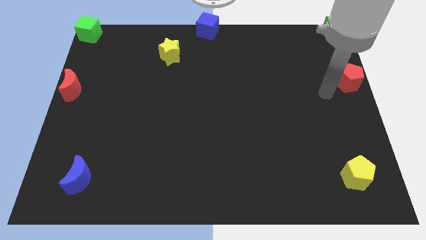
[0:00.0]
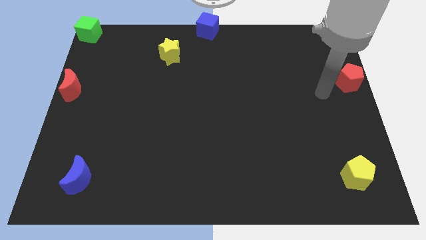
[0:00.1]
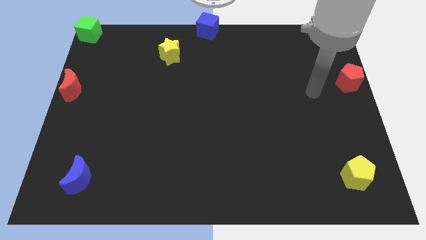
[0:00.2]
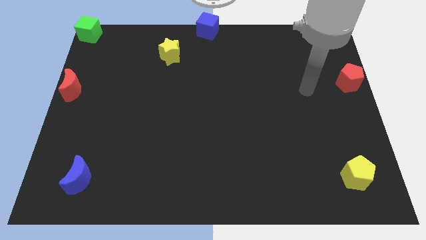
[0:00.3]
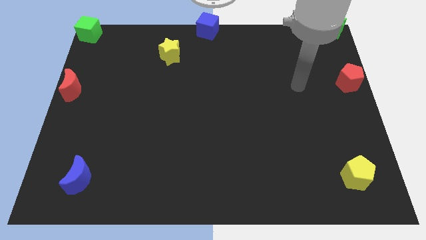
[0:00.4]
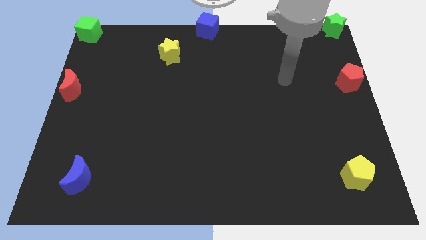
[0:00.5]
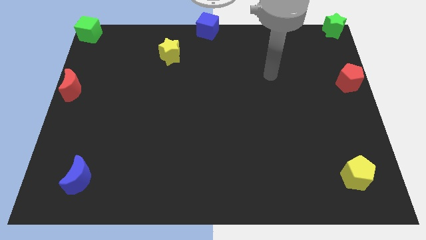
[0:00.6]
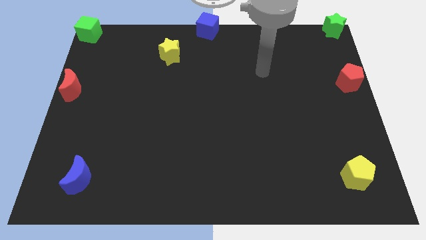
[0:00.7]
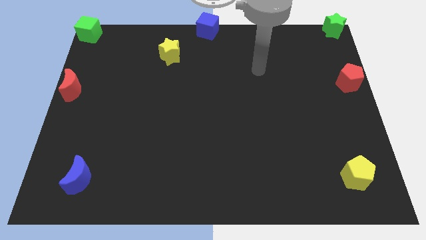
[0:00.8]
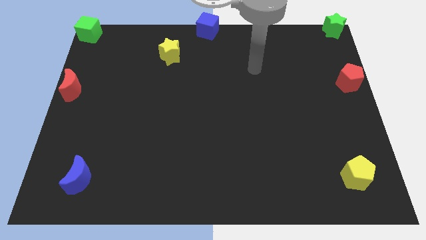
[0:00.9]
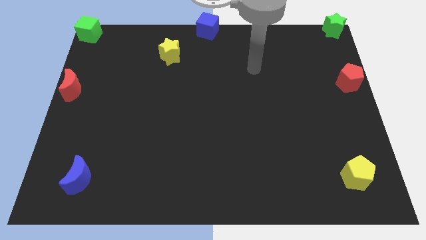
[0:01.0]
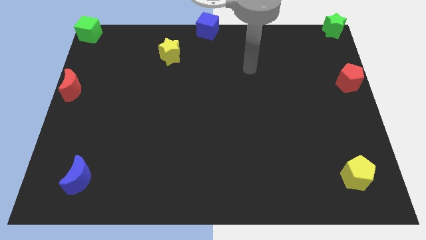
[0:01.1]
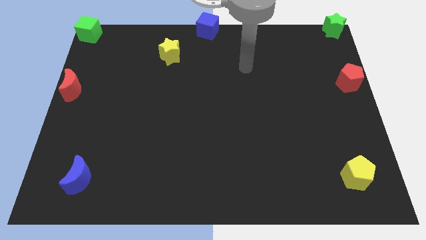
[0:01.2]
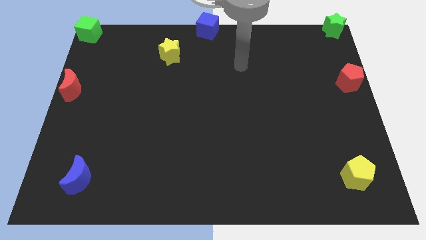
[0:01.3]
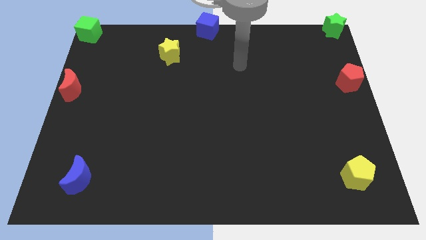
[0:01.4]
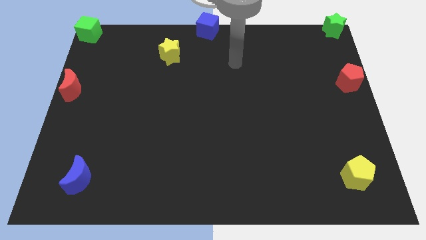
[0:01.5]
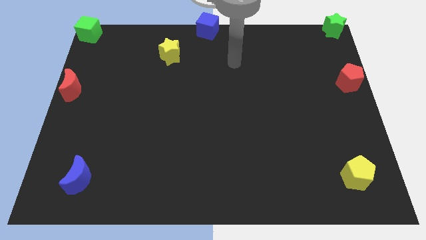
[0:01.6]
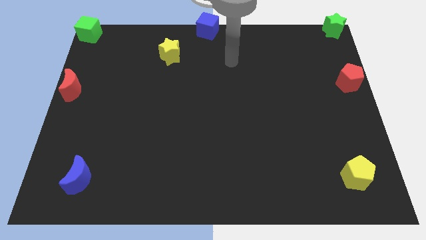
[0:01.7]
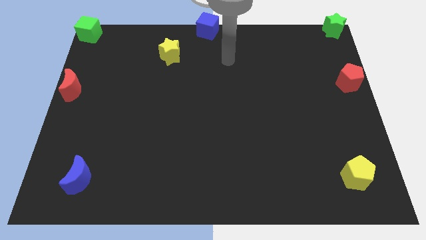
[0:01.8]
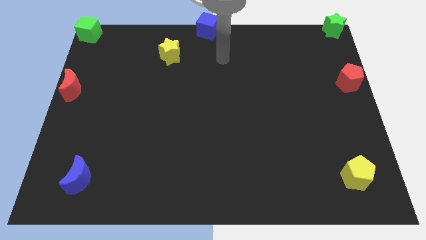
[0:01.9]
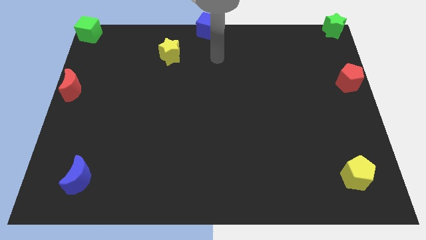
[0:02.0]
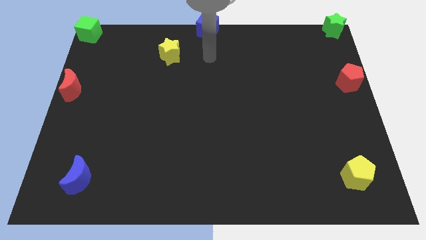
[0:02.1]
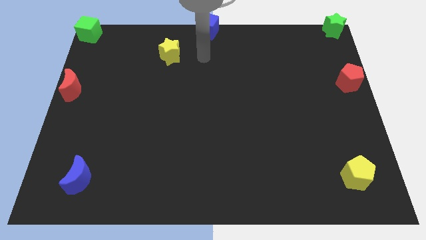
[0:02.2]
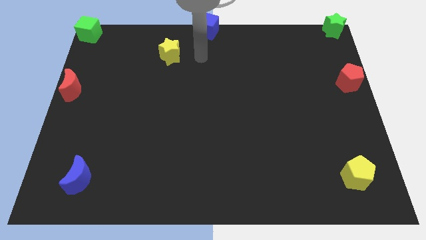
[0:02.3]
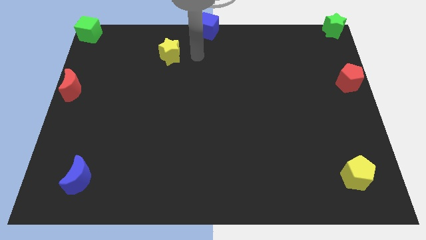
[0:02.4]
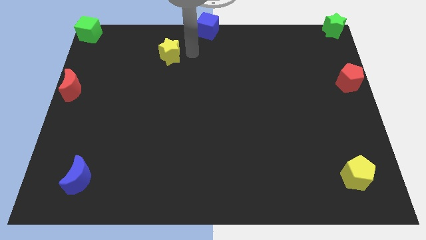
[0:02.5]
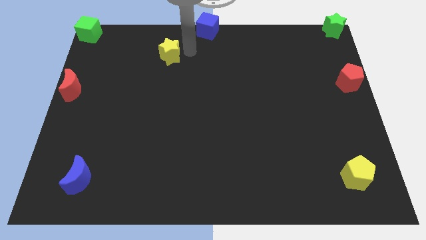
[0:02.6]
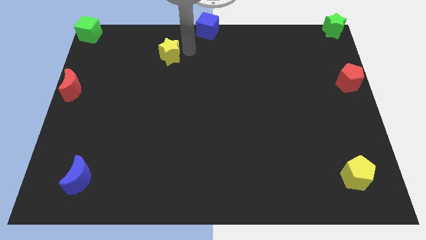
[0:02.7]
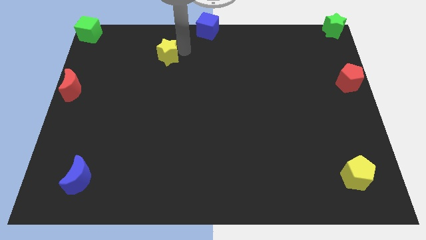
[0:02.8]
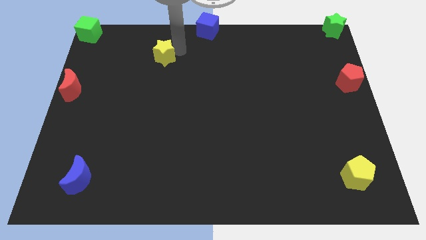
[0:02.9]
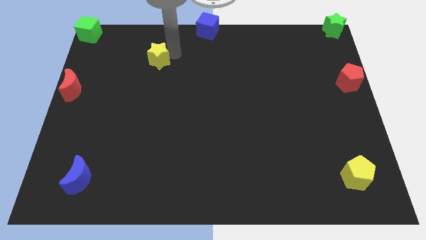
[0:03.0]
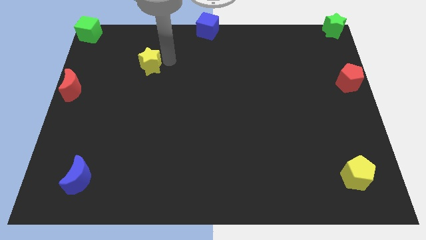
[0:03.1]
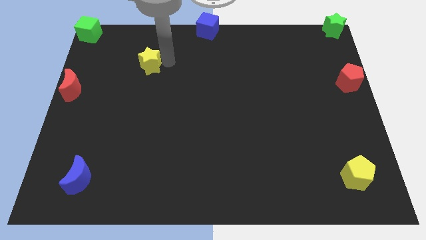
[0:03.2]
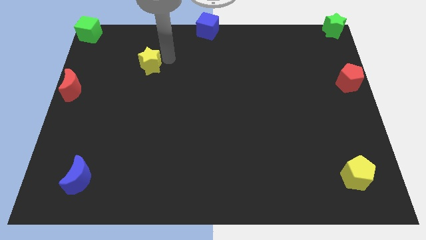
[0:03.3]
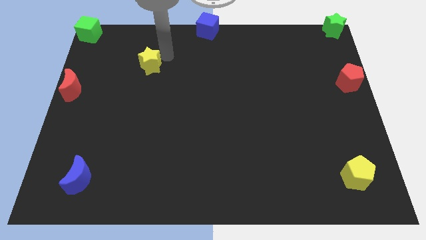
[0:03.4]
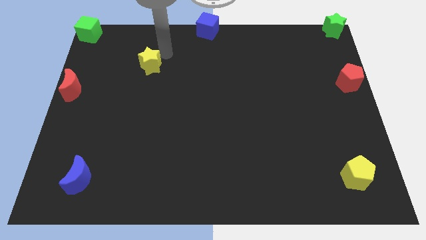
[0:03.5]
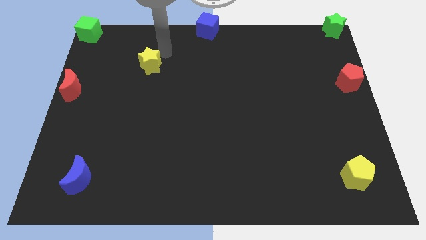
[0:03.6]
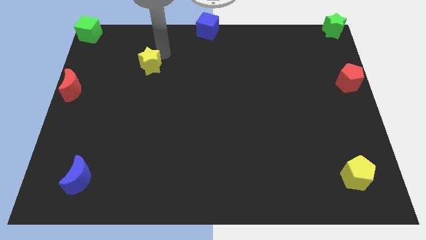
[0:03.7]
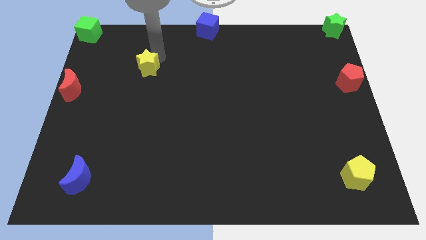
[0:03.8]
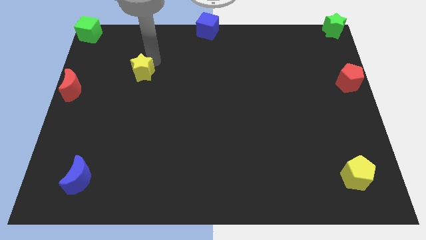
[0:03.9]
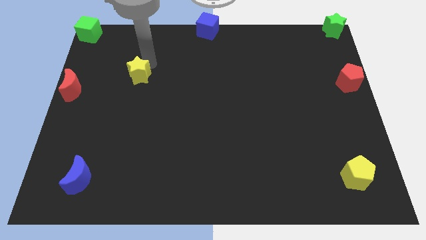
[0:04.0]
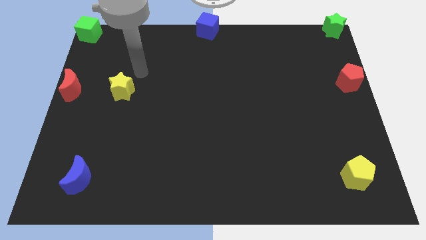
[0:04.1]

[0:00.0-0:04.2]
push the yellow star horizontally towards red crescent

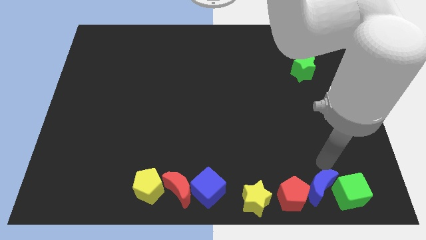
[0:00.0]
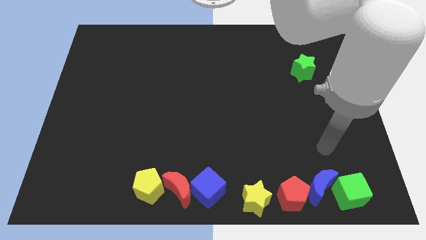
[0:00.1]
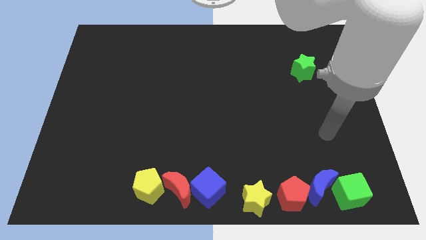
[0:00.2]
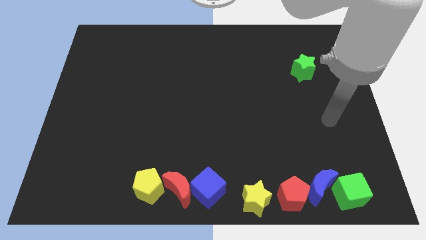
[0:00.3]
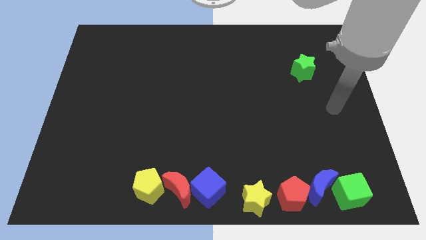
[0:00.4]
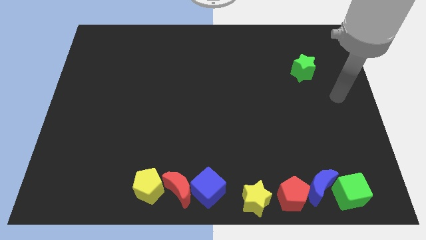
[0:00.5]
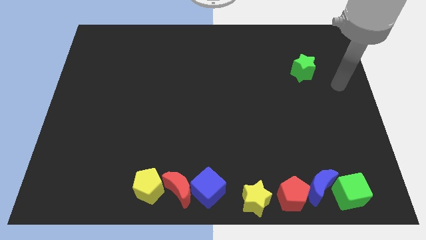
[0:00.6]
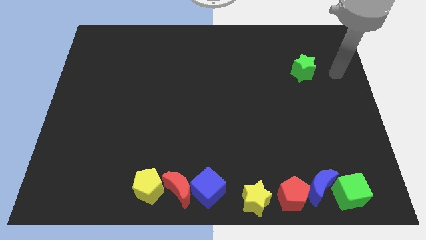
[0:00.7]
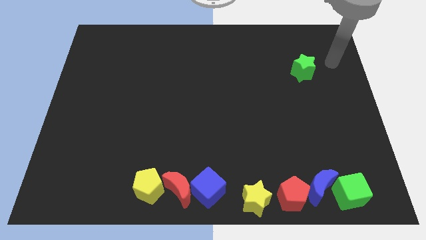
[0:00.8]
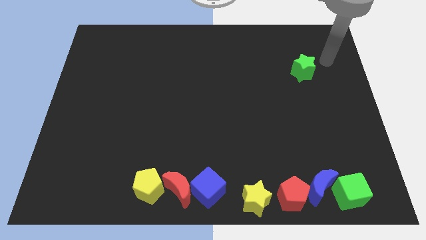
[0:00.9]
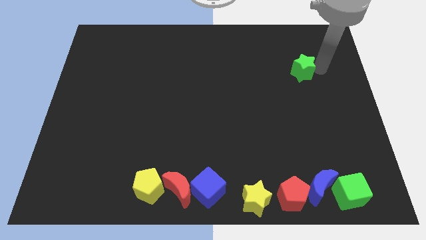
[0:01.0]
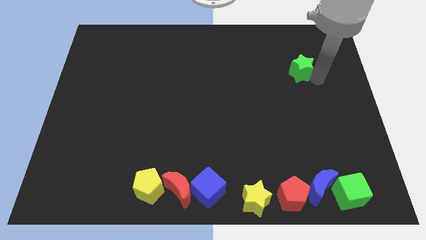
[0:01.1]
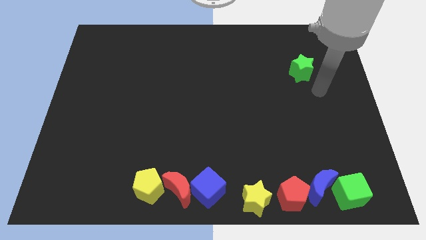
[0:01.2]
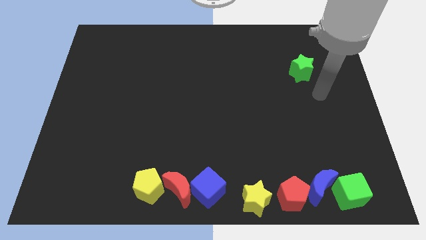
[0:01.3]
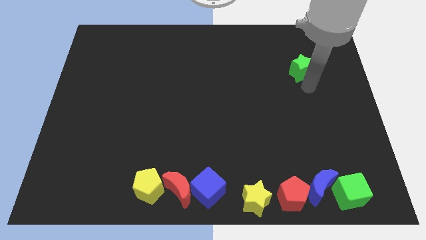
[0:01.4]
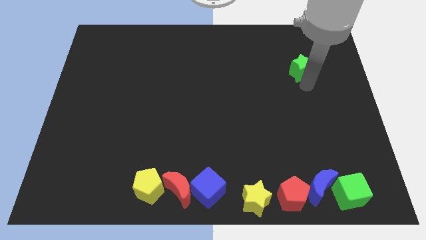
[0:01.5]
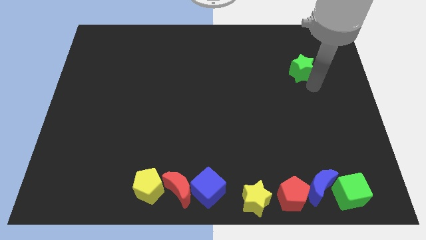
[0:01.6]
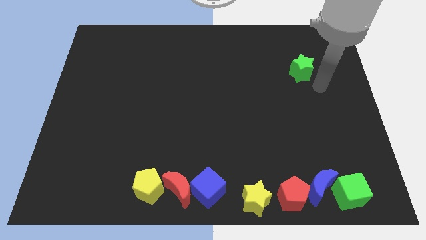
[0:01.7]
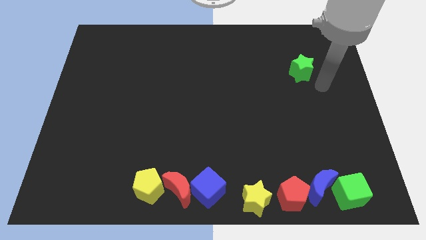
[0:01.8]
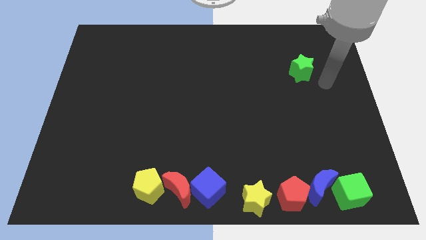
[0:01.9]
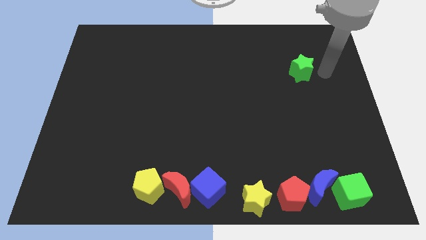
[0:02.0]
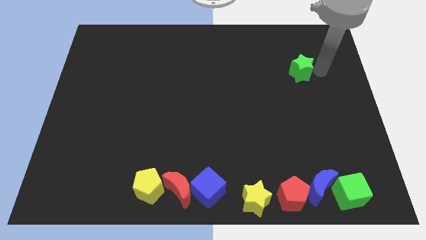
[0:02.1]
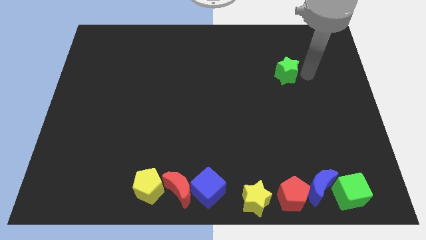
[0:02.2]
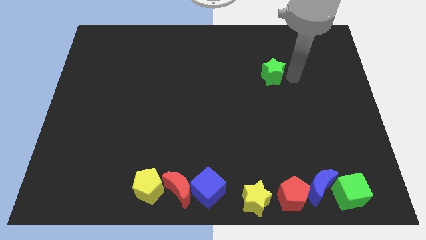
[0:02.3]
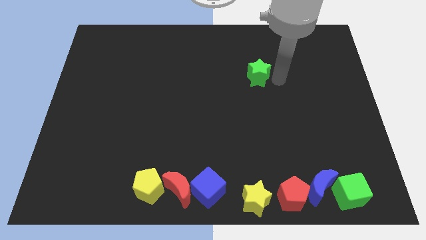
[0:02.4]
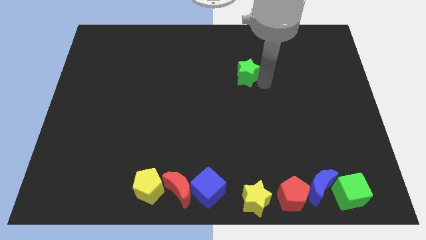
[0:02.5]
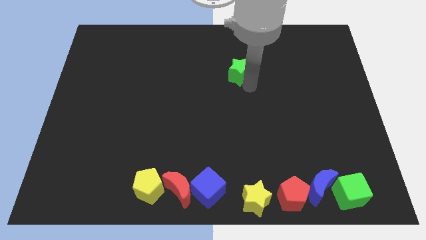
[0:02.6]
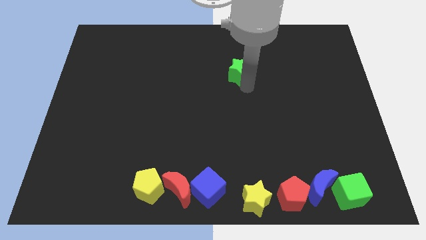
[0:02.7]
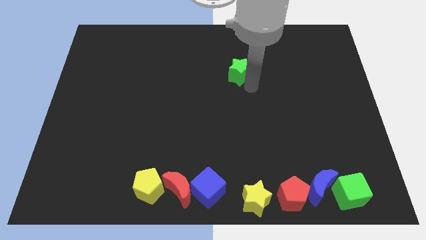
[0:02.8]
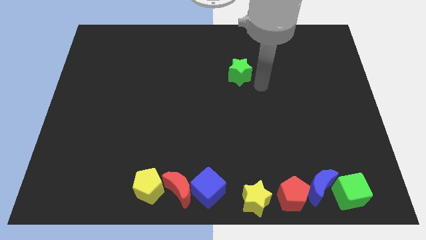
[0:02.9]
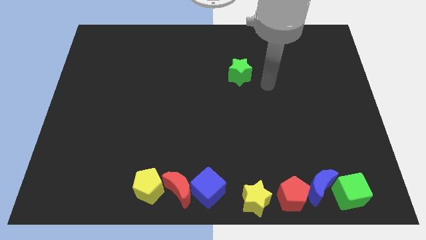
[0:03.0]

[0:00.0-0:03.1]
push the green star towards the left to the board

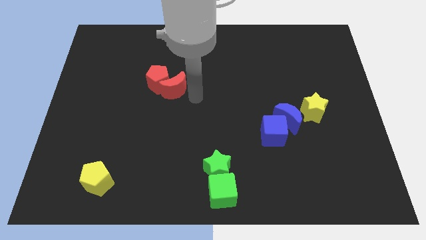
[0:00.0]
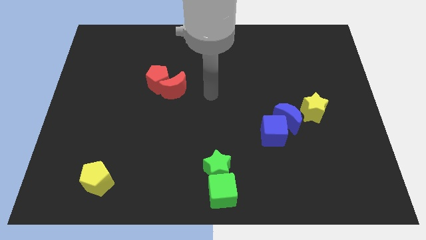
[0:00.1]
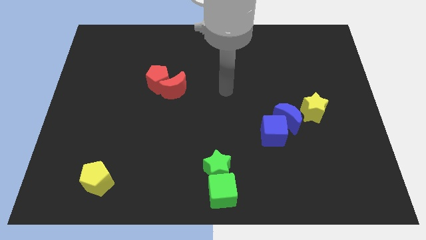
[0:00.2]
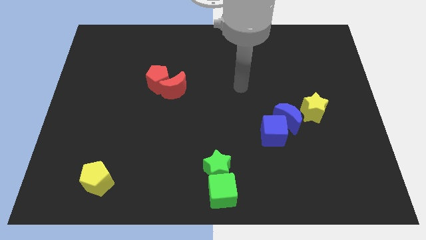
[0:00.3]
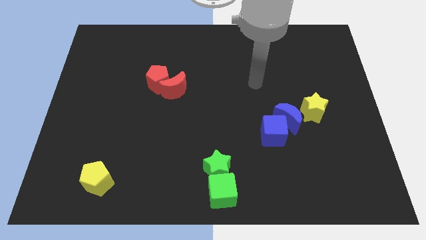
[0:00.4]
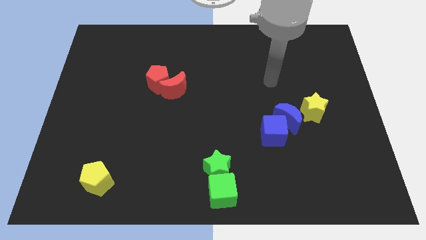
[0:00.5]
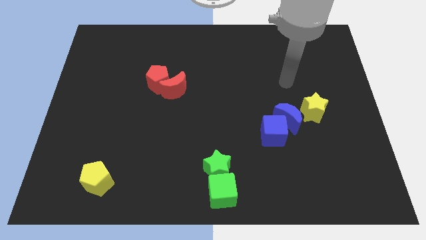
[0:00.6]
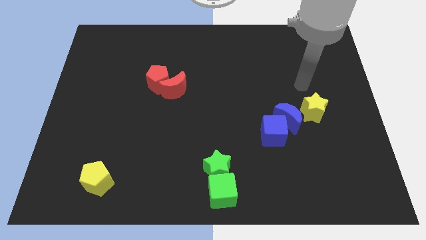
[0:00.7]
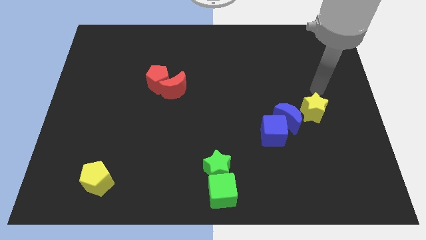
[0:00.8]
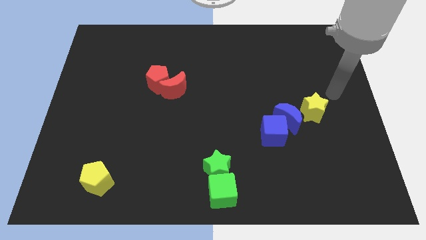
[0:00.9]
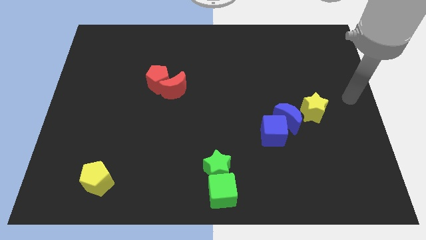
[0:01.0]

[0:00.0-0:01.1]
move your arm to the right center of the board

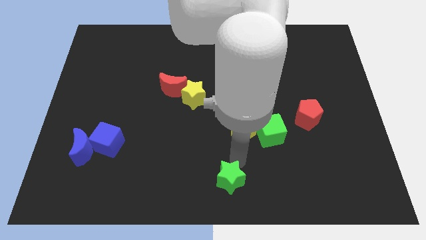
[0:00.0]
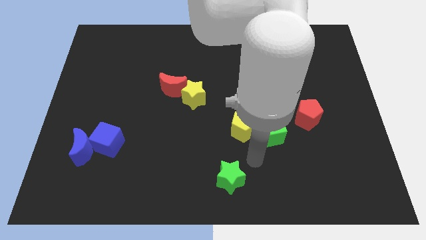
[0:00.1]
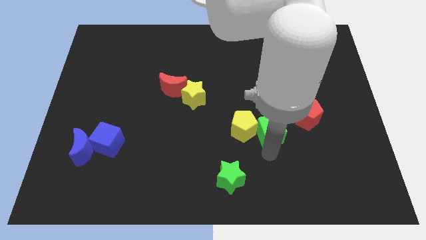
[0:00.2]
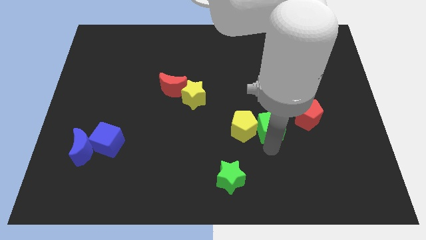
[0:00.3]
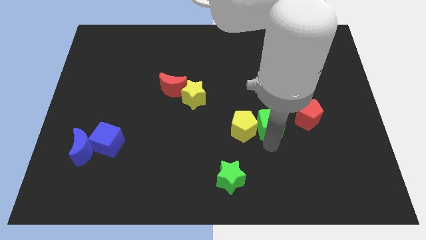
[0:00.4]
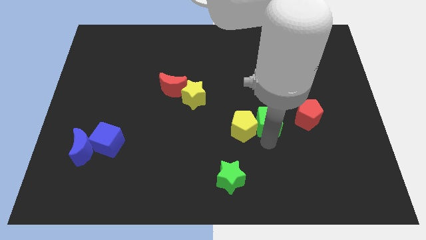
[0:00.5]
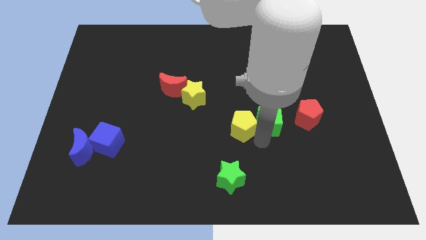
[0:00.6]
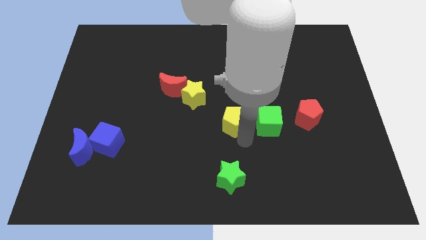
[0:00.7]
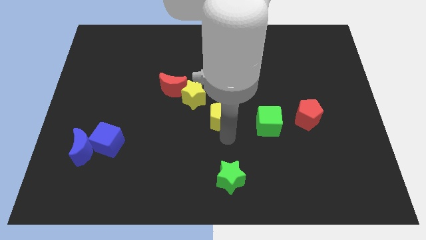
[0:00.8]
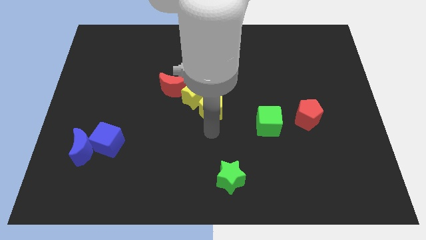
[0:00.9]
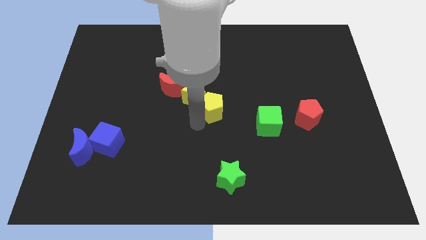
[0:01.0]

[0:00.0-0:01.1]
push yellow pentagon near yellow star
